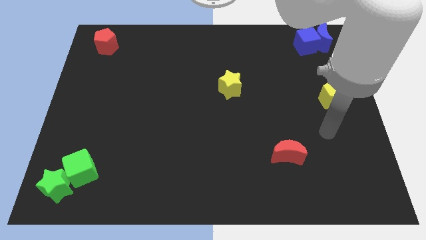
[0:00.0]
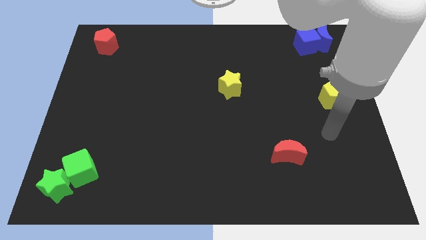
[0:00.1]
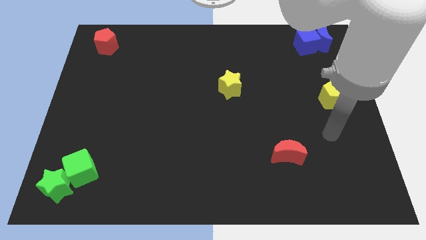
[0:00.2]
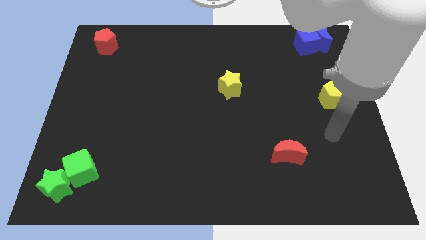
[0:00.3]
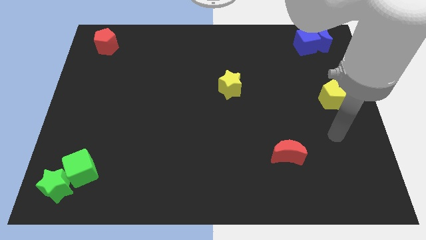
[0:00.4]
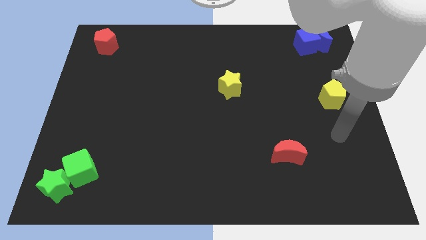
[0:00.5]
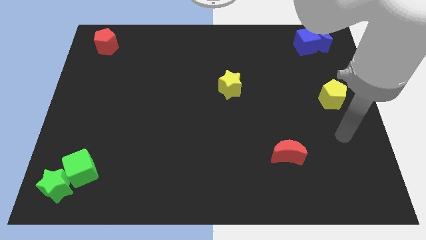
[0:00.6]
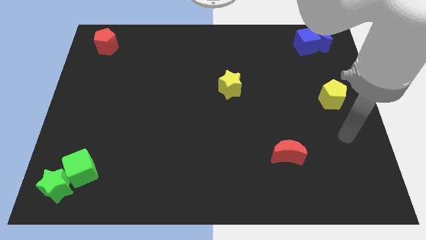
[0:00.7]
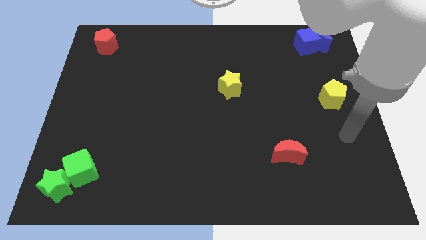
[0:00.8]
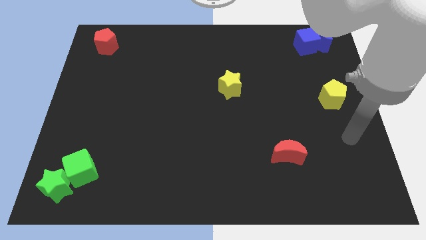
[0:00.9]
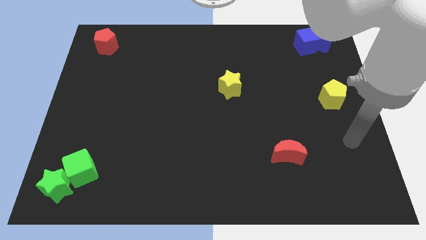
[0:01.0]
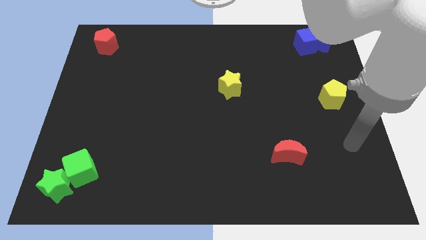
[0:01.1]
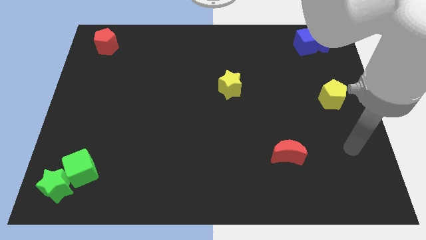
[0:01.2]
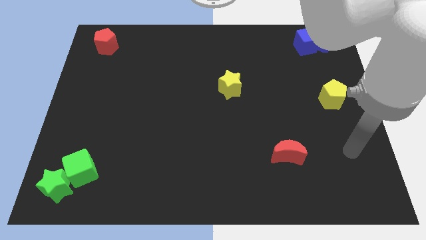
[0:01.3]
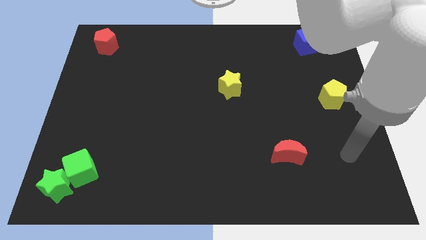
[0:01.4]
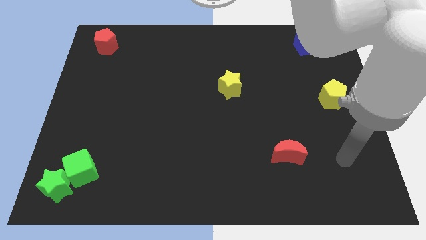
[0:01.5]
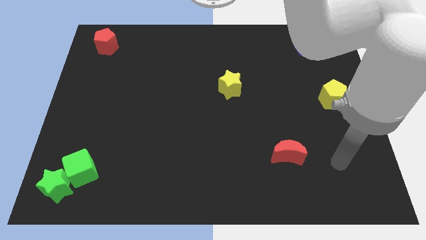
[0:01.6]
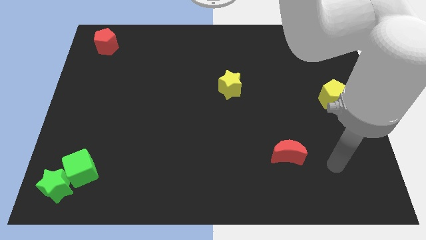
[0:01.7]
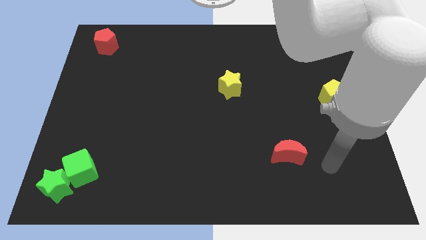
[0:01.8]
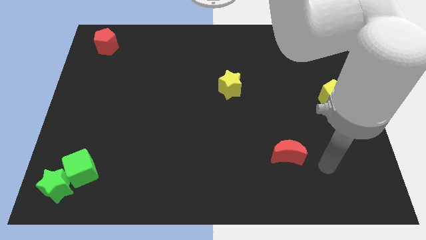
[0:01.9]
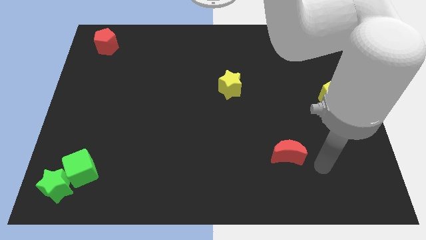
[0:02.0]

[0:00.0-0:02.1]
move your arm to the right side of the red crescent

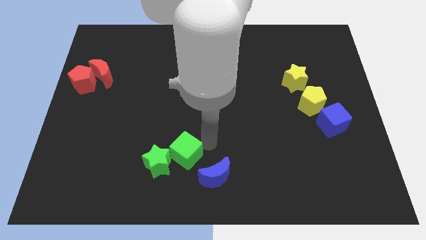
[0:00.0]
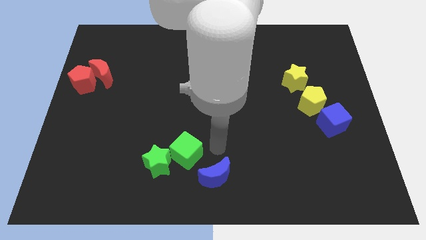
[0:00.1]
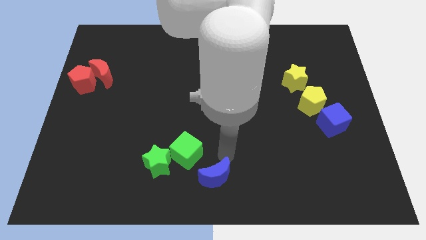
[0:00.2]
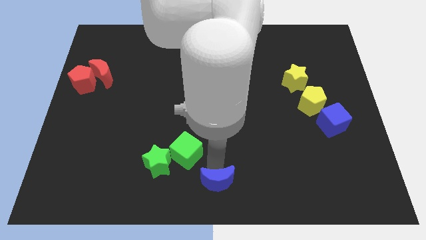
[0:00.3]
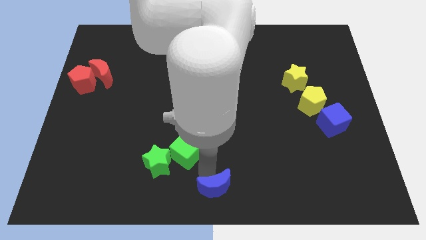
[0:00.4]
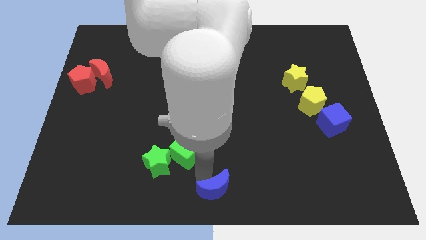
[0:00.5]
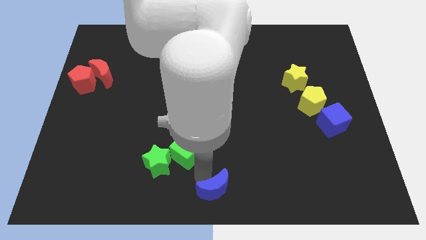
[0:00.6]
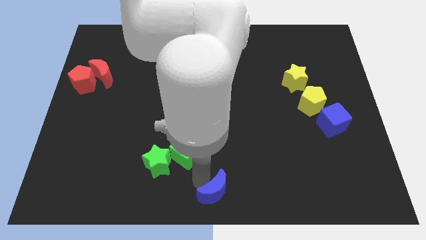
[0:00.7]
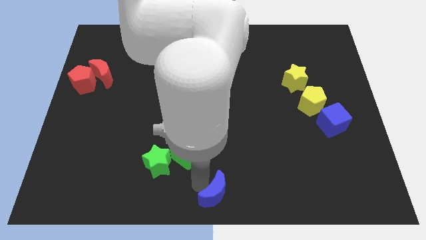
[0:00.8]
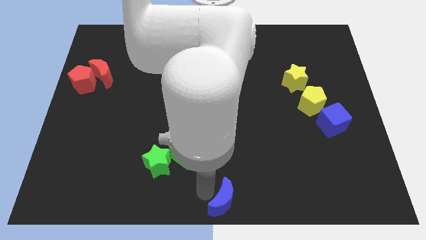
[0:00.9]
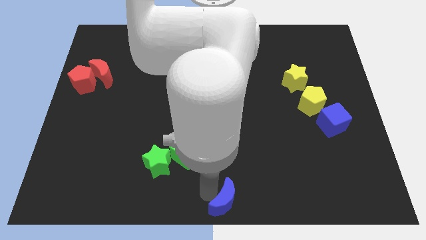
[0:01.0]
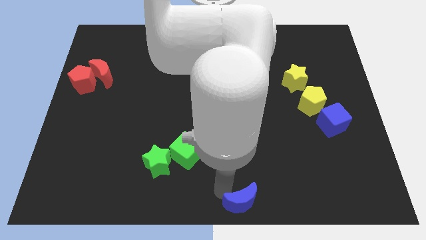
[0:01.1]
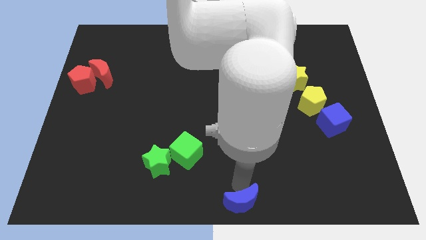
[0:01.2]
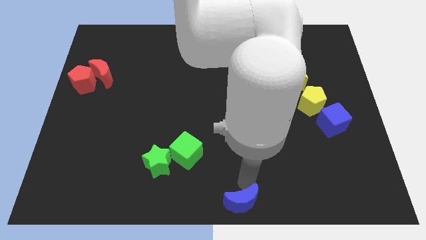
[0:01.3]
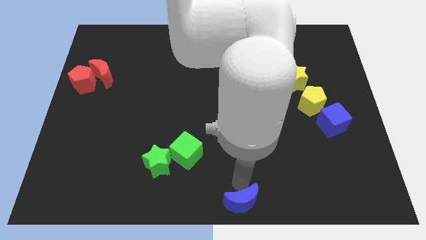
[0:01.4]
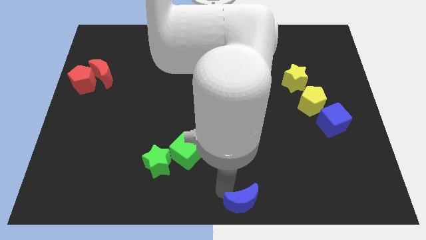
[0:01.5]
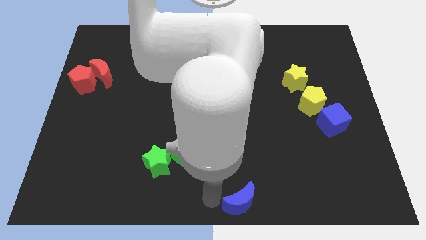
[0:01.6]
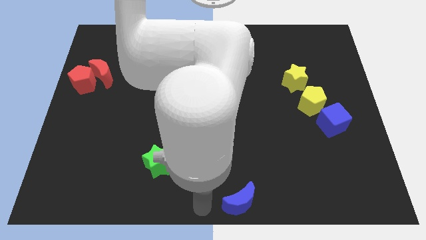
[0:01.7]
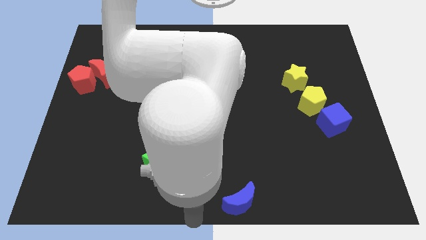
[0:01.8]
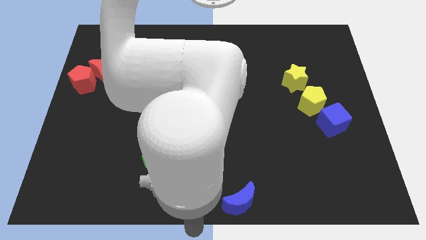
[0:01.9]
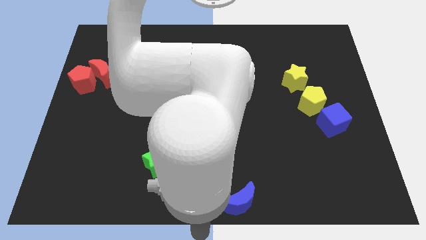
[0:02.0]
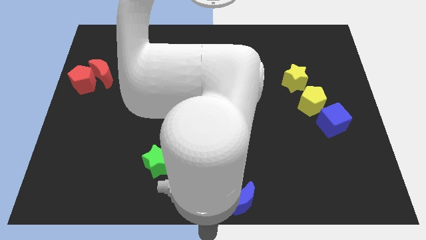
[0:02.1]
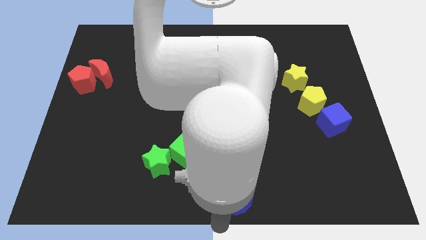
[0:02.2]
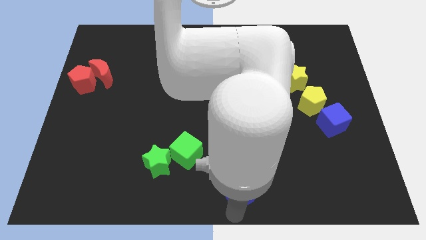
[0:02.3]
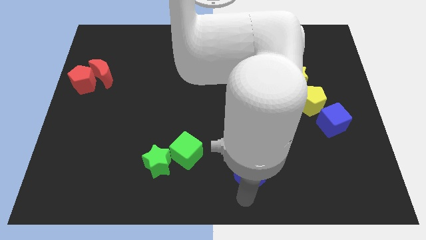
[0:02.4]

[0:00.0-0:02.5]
push the blue moon towards bottom center of the board

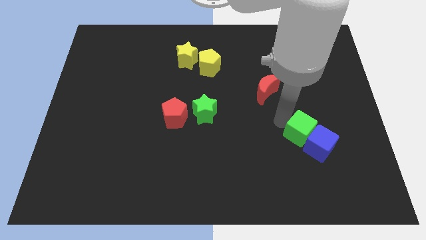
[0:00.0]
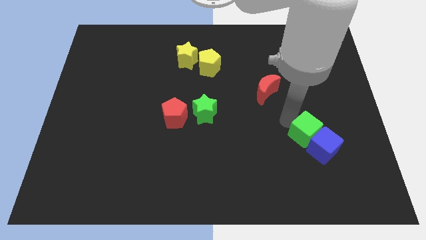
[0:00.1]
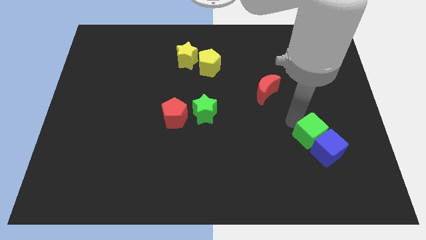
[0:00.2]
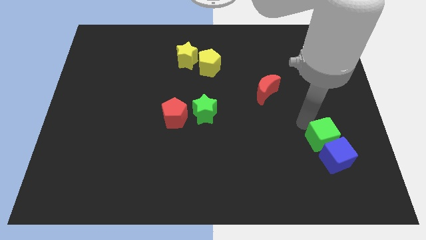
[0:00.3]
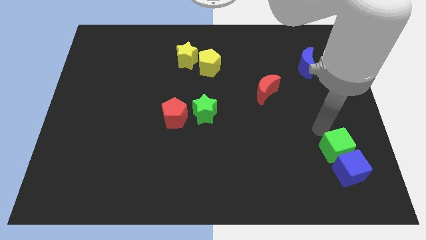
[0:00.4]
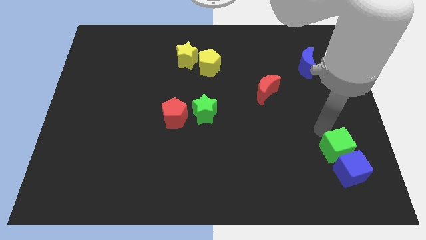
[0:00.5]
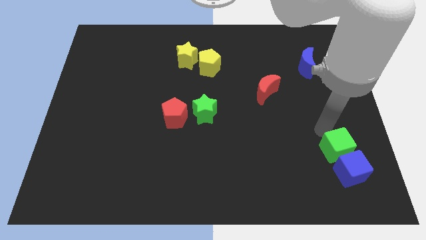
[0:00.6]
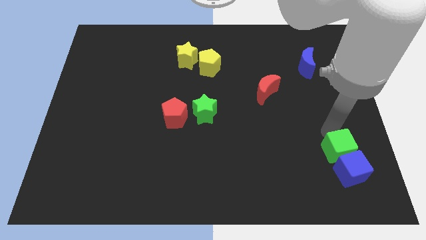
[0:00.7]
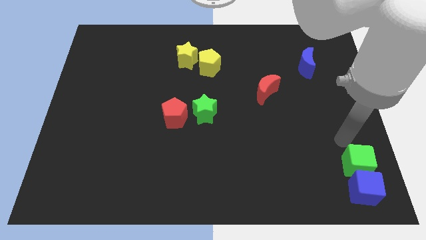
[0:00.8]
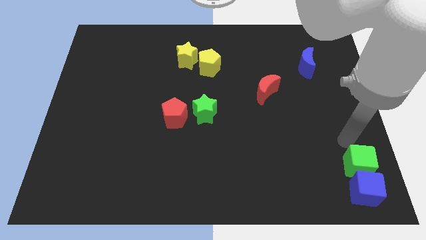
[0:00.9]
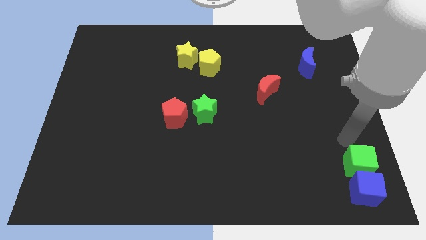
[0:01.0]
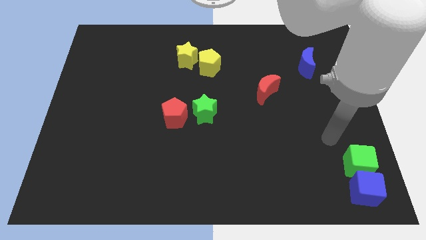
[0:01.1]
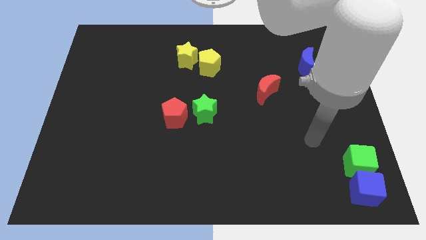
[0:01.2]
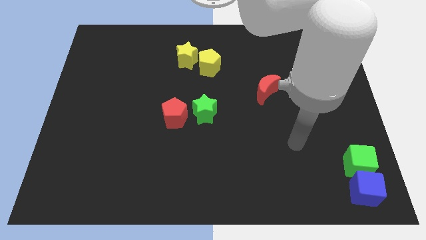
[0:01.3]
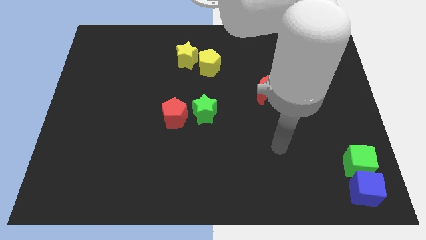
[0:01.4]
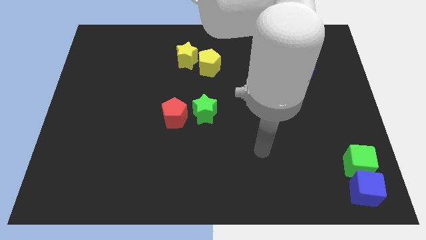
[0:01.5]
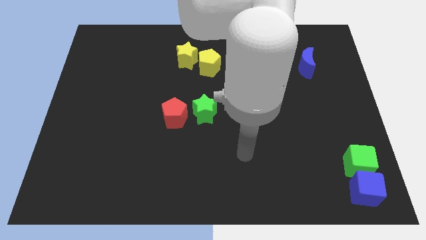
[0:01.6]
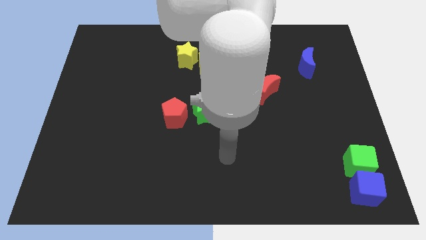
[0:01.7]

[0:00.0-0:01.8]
move the green cube and the blue cube to the bottom right of the board

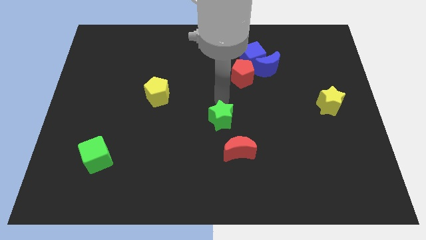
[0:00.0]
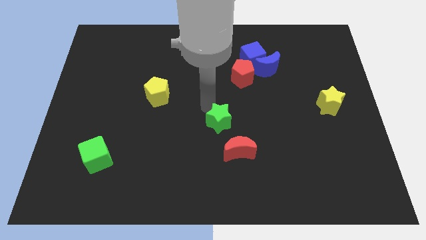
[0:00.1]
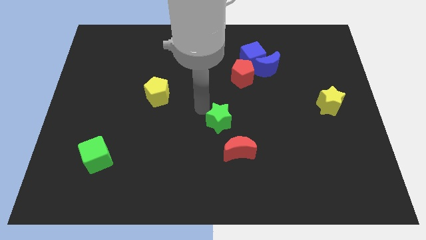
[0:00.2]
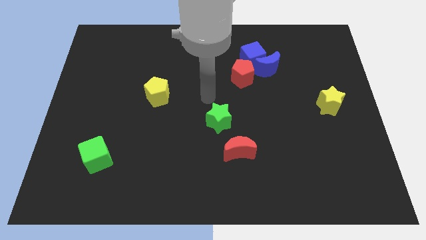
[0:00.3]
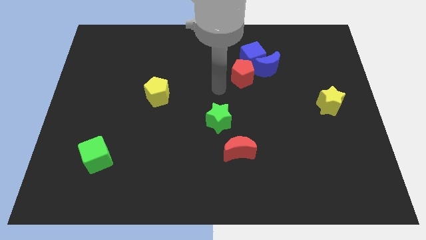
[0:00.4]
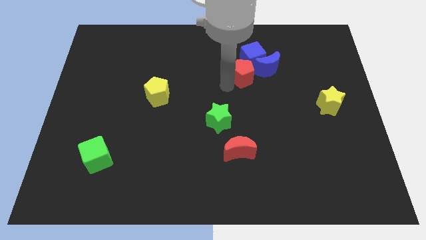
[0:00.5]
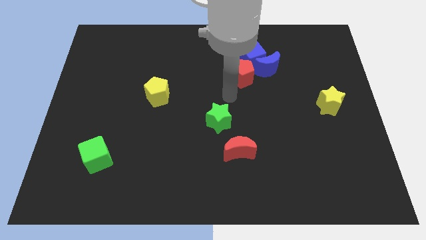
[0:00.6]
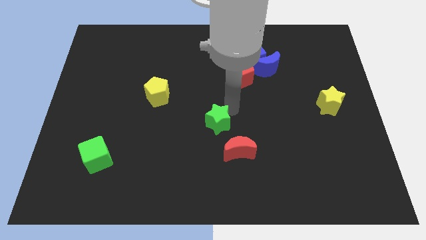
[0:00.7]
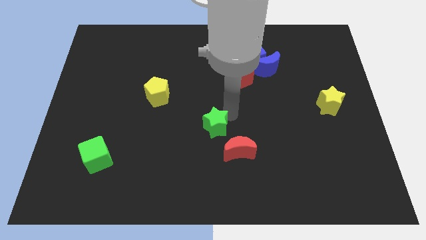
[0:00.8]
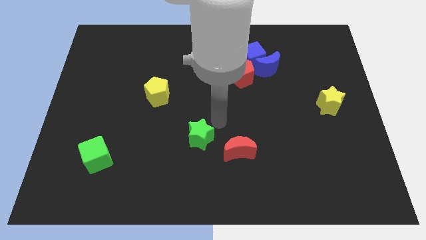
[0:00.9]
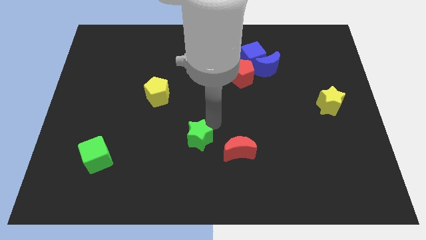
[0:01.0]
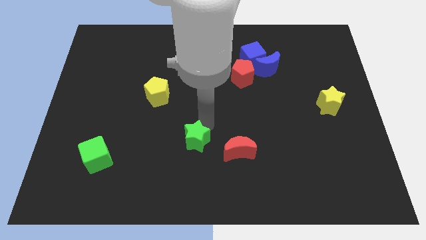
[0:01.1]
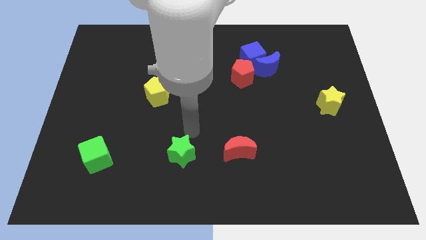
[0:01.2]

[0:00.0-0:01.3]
place the green star in between the red moon and green cube

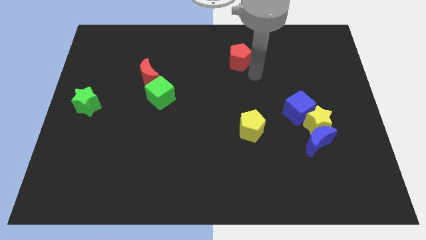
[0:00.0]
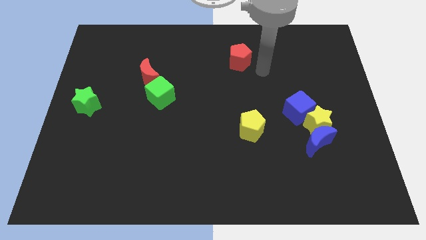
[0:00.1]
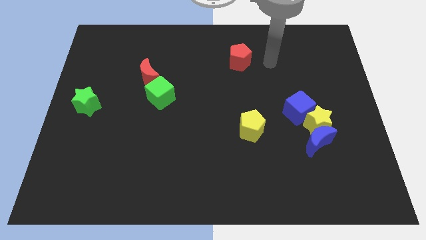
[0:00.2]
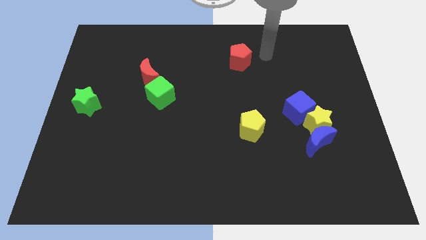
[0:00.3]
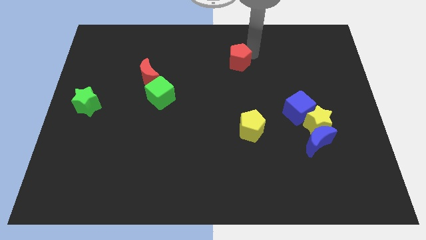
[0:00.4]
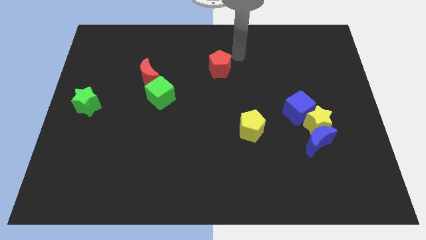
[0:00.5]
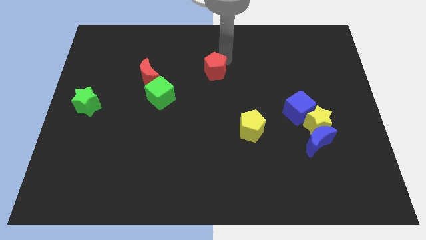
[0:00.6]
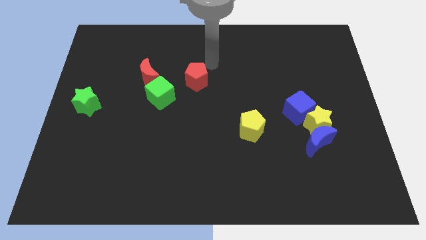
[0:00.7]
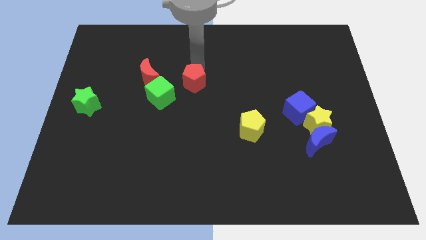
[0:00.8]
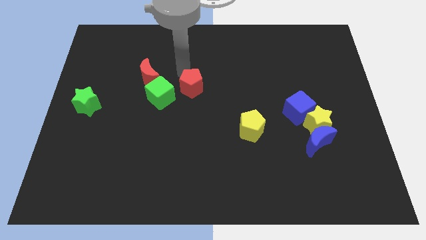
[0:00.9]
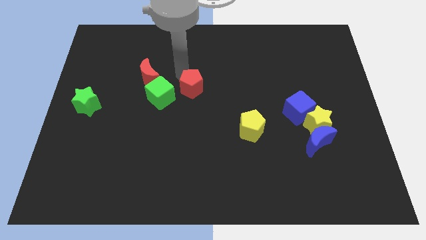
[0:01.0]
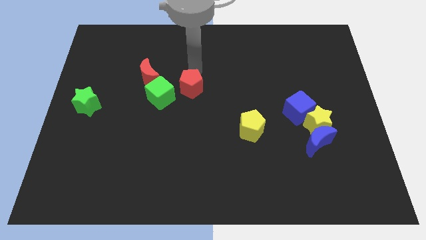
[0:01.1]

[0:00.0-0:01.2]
place the red pentagon at the right side of the green cube
